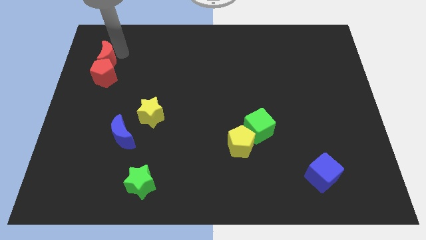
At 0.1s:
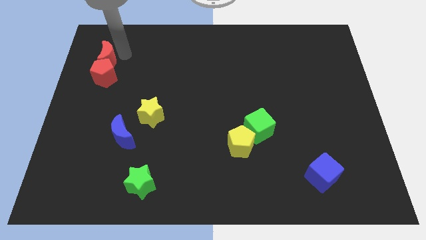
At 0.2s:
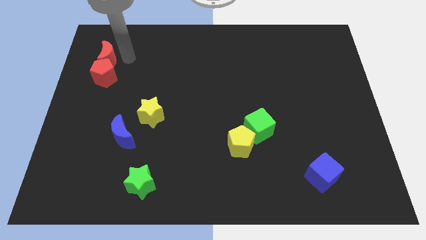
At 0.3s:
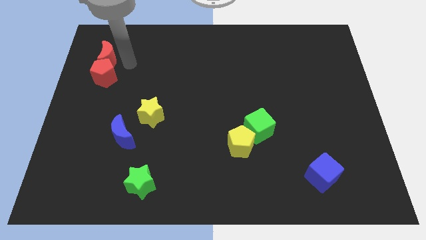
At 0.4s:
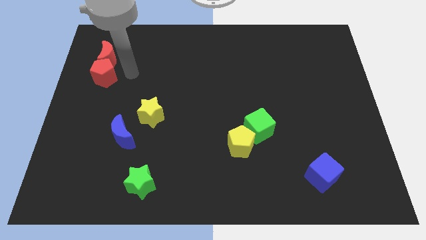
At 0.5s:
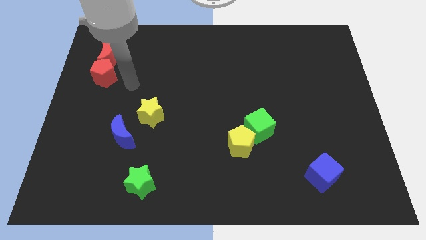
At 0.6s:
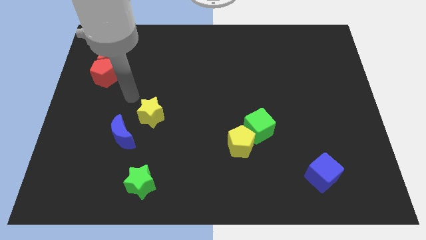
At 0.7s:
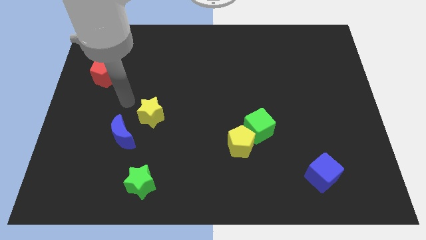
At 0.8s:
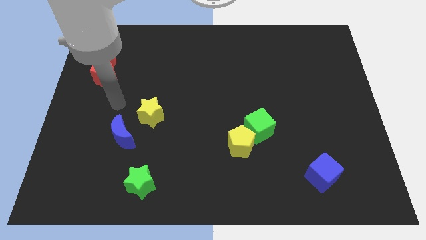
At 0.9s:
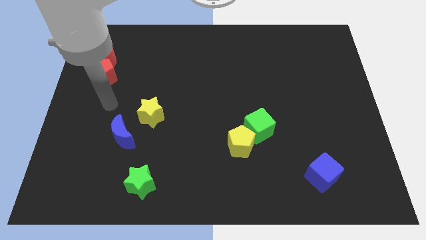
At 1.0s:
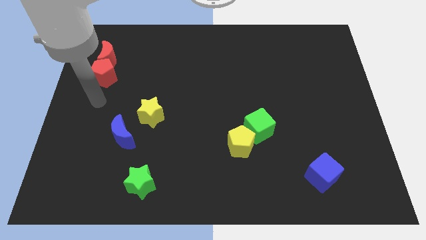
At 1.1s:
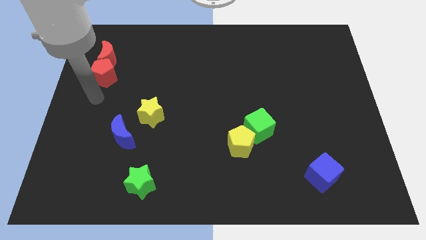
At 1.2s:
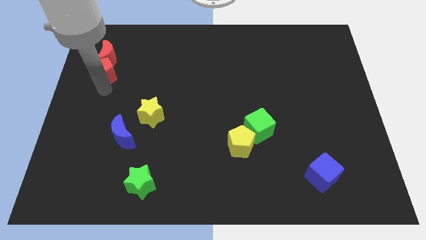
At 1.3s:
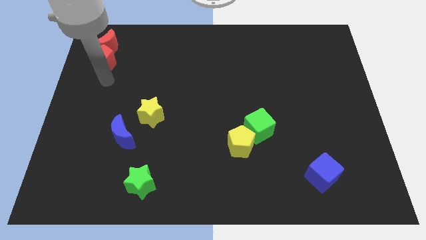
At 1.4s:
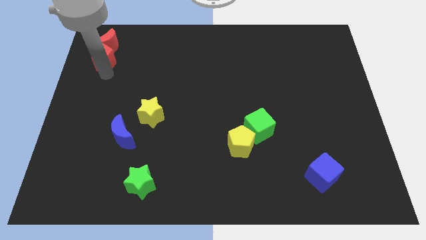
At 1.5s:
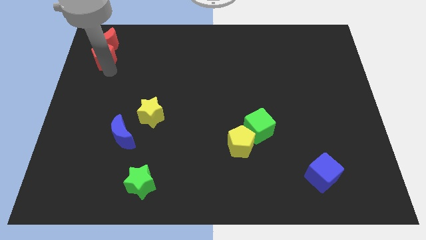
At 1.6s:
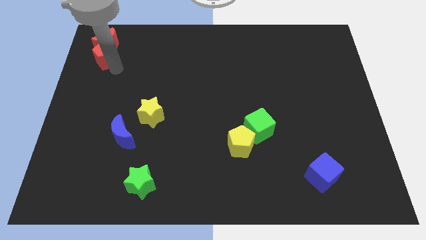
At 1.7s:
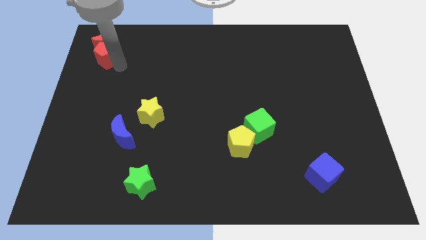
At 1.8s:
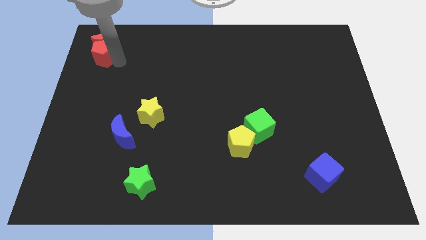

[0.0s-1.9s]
move the red pentagon along with red crescent to the top left of the board

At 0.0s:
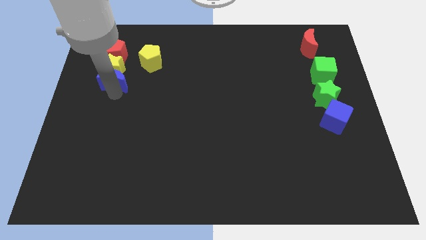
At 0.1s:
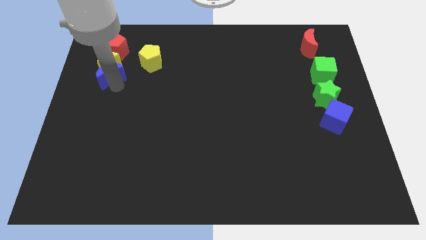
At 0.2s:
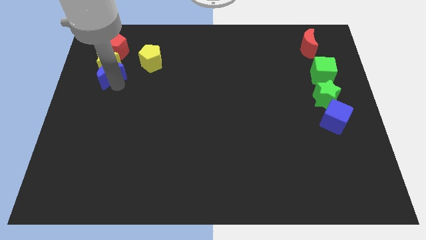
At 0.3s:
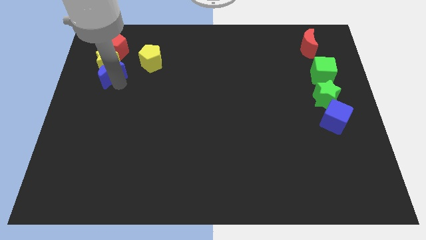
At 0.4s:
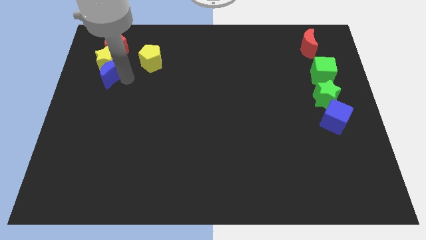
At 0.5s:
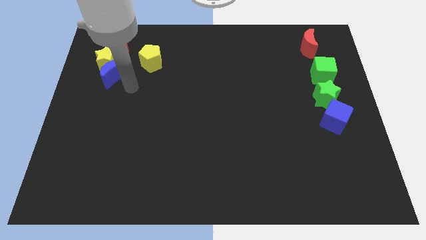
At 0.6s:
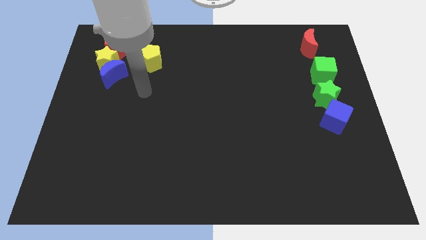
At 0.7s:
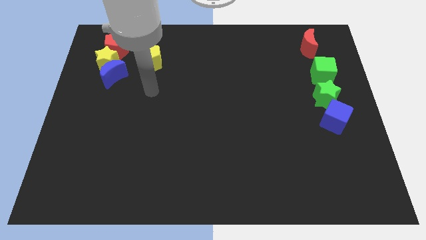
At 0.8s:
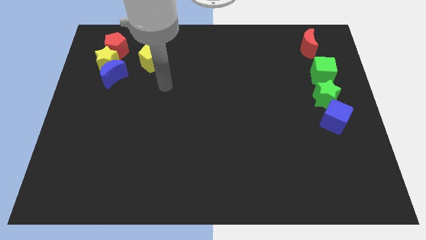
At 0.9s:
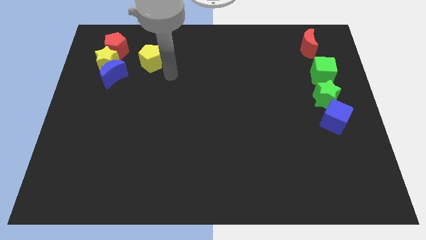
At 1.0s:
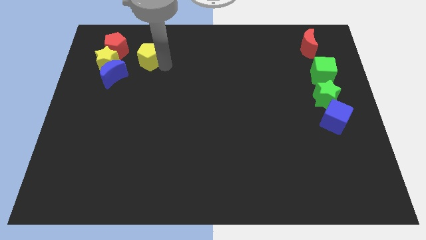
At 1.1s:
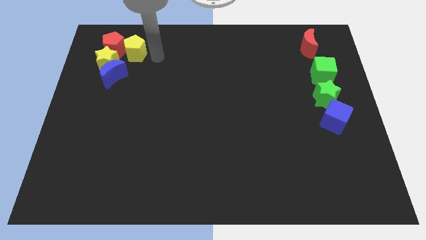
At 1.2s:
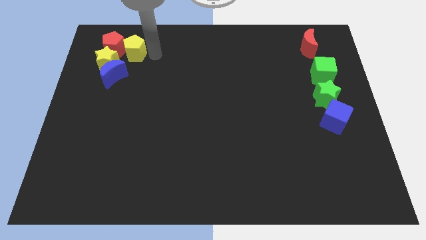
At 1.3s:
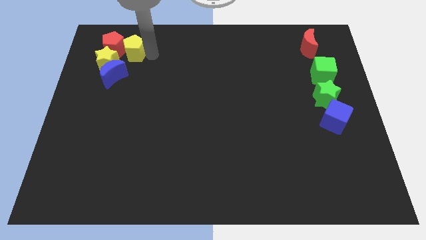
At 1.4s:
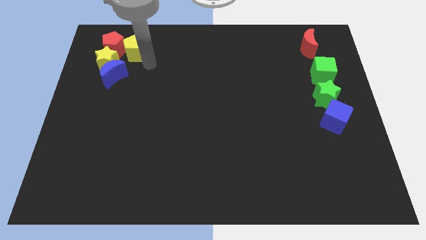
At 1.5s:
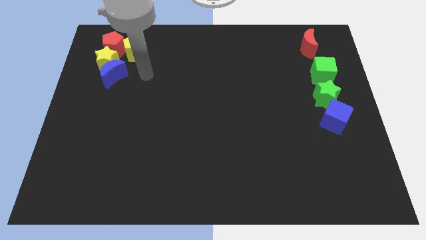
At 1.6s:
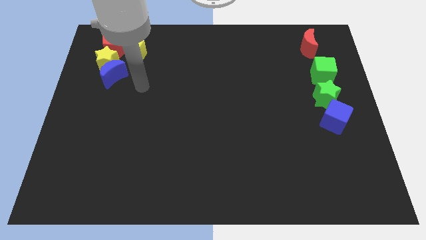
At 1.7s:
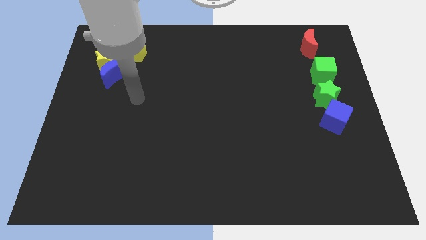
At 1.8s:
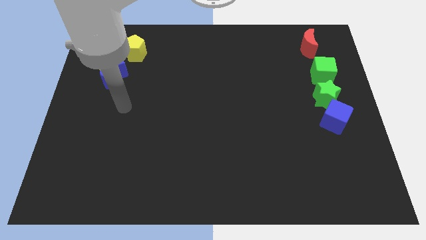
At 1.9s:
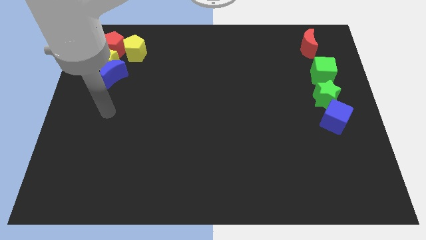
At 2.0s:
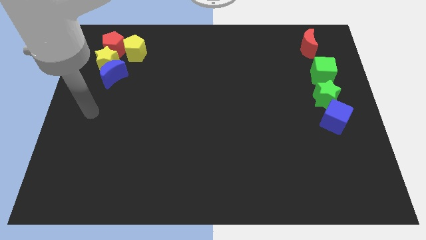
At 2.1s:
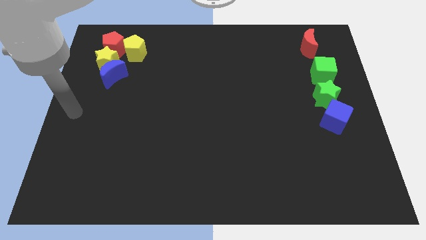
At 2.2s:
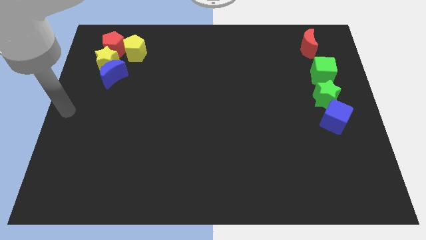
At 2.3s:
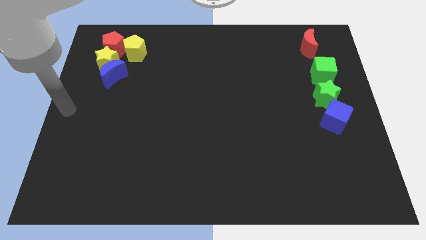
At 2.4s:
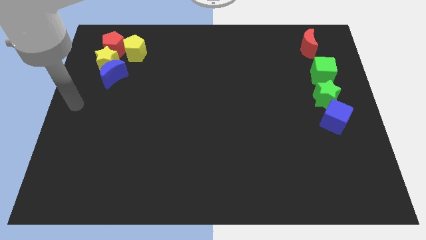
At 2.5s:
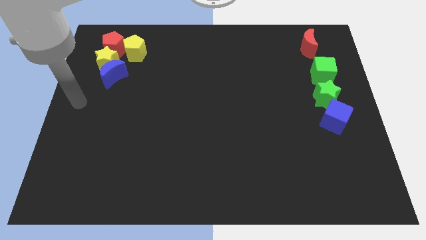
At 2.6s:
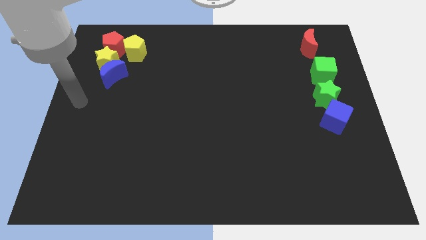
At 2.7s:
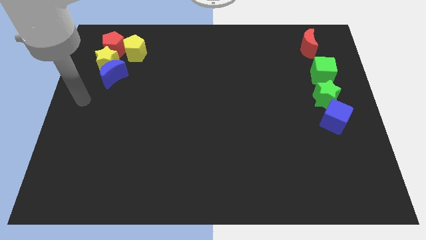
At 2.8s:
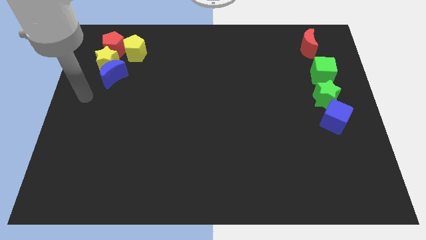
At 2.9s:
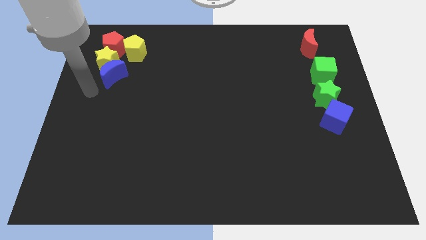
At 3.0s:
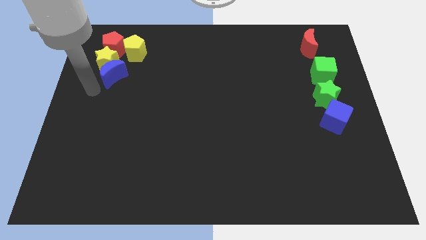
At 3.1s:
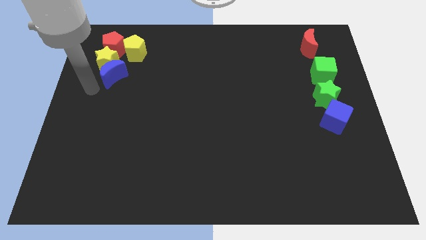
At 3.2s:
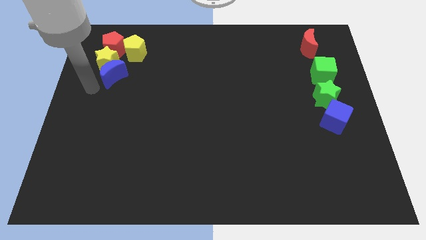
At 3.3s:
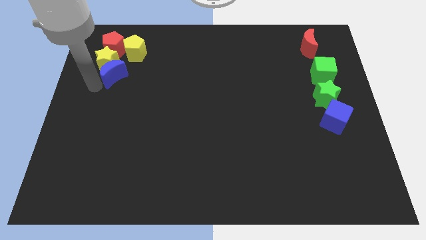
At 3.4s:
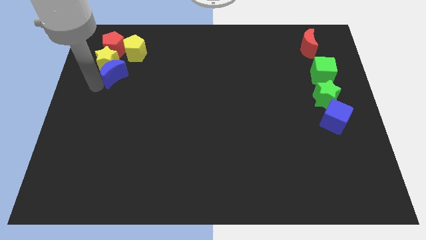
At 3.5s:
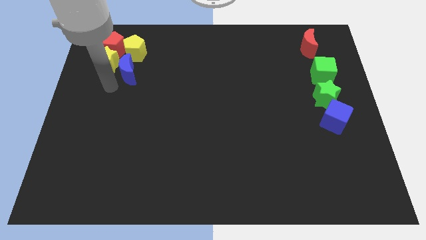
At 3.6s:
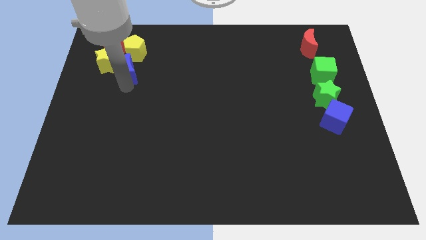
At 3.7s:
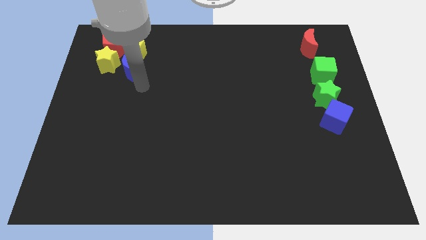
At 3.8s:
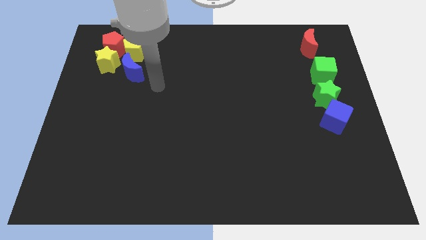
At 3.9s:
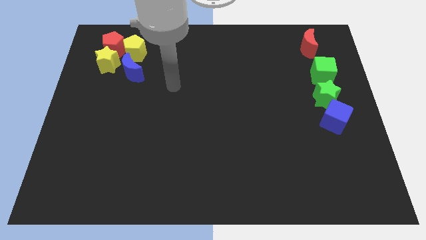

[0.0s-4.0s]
push blue crescent below yellow pentagon

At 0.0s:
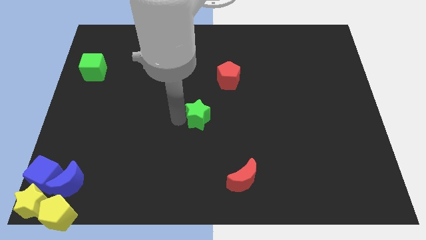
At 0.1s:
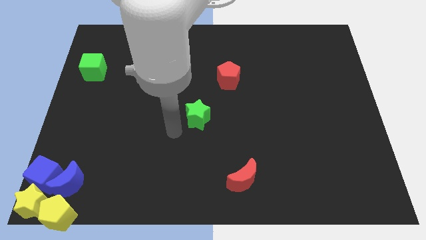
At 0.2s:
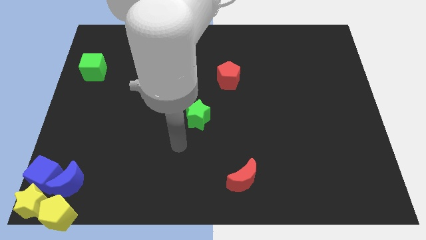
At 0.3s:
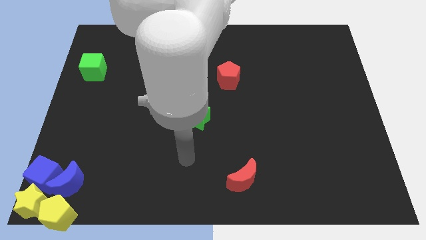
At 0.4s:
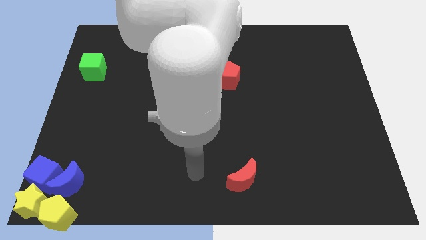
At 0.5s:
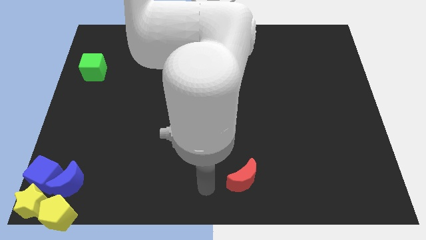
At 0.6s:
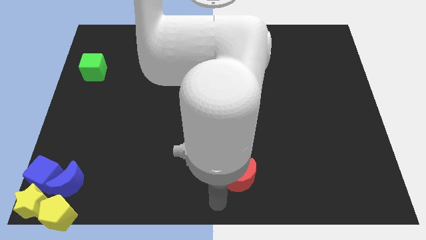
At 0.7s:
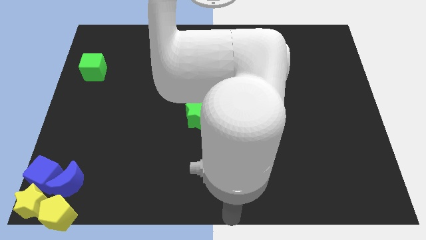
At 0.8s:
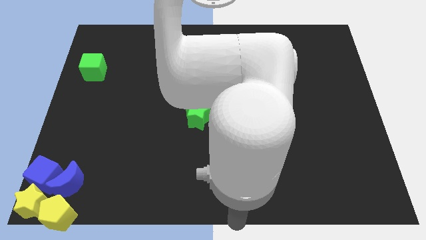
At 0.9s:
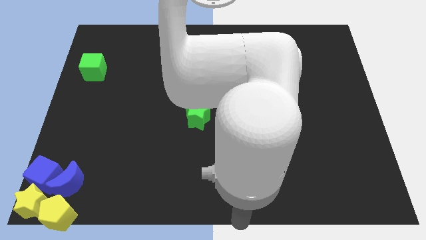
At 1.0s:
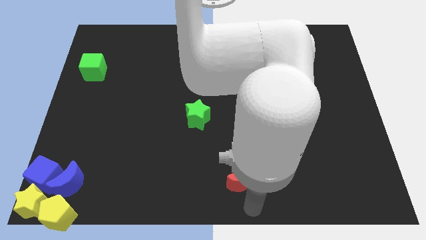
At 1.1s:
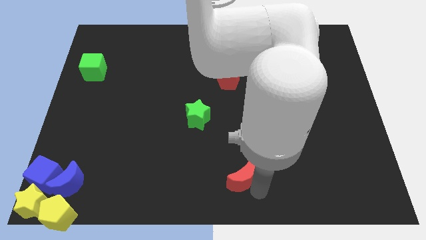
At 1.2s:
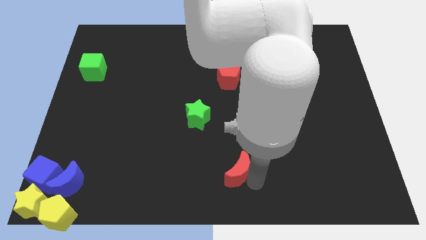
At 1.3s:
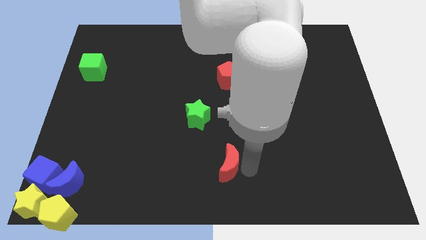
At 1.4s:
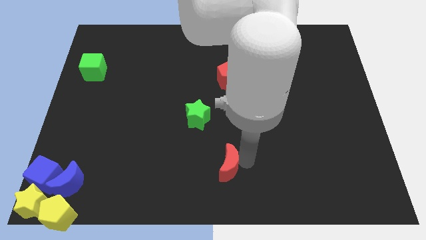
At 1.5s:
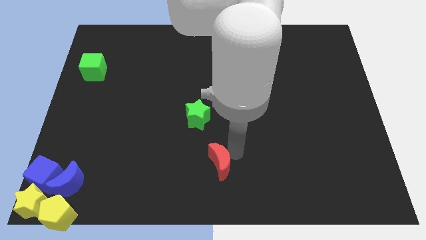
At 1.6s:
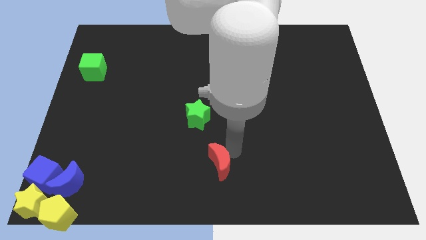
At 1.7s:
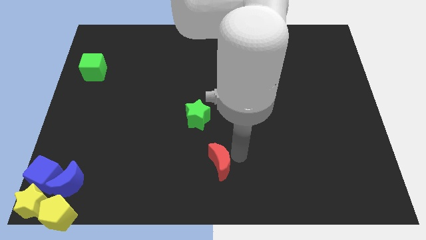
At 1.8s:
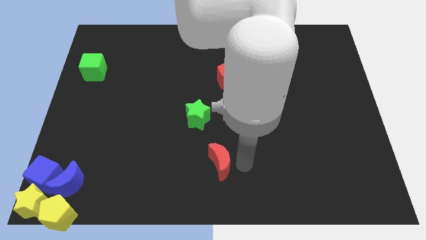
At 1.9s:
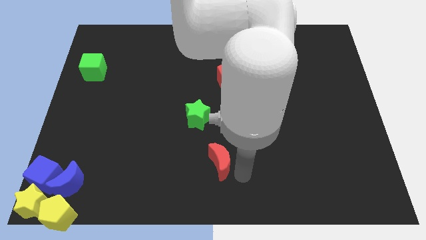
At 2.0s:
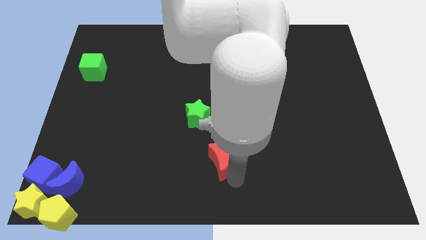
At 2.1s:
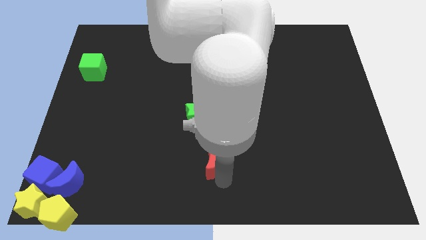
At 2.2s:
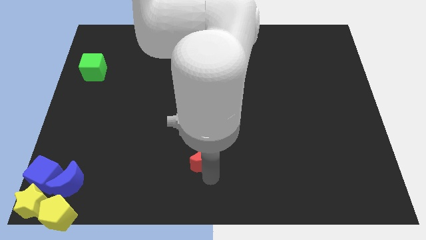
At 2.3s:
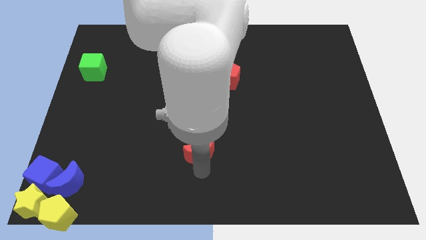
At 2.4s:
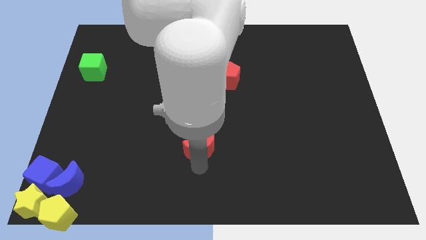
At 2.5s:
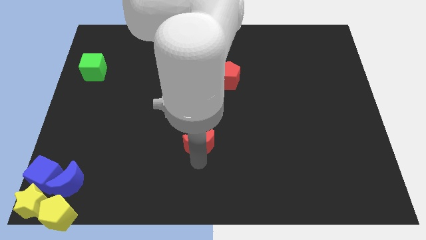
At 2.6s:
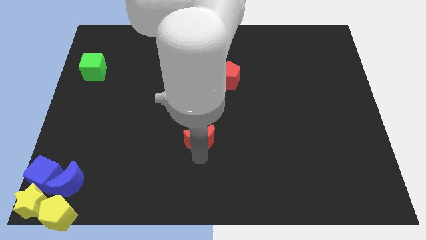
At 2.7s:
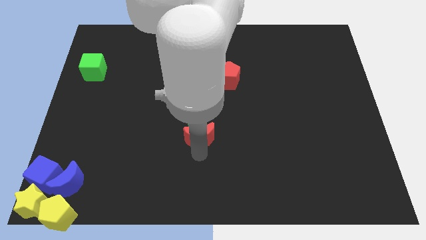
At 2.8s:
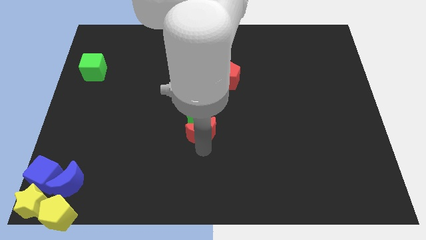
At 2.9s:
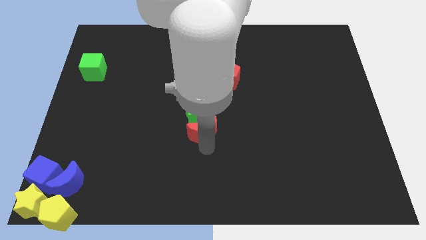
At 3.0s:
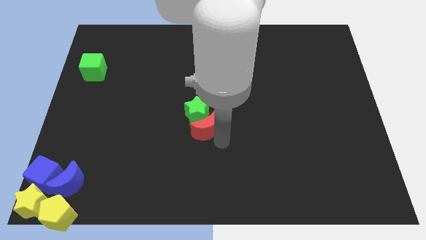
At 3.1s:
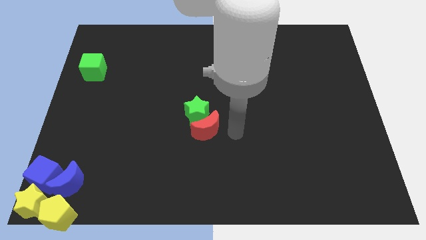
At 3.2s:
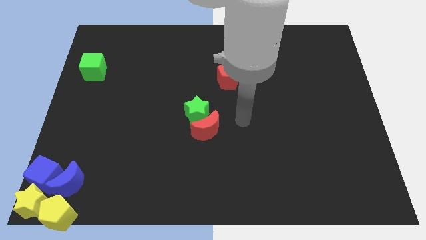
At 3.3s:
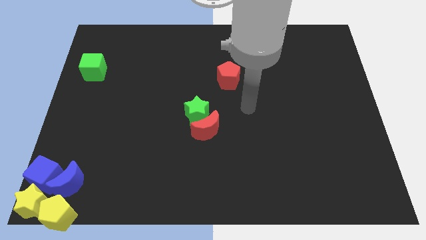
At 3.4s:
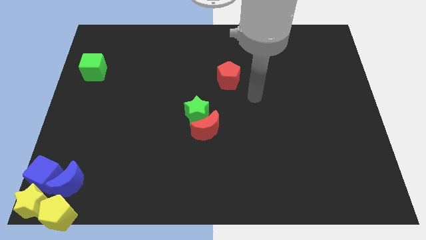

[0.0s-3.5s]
place the red moon below the green star
